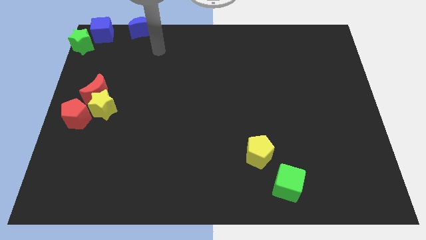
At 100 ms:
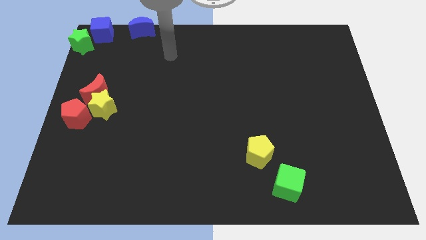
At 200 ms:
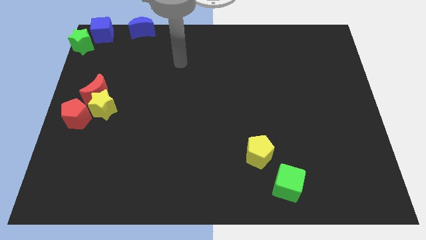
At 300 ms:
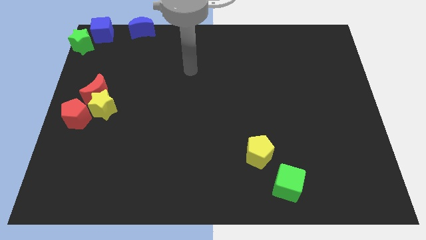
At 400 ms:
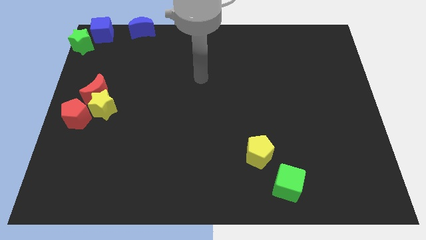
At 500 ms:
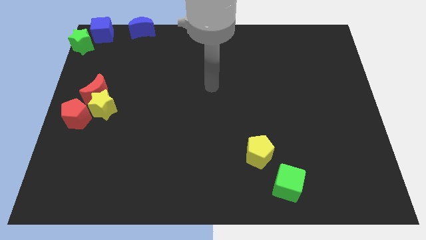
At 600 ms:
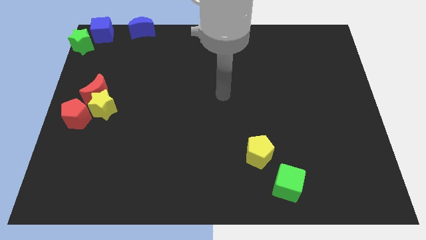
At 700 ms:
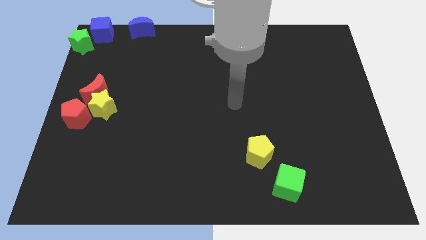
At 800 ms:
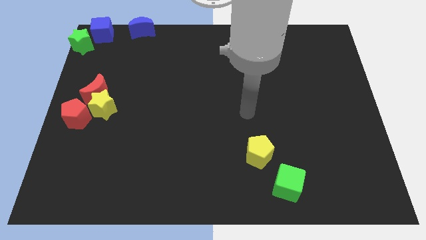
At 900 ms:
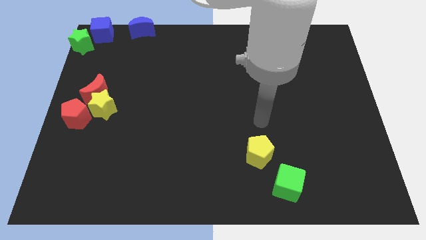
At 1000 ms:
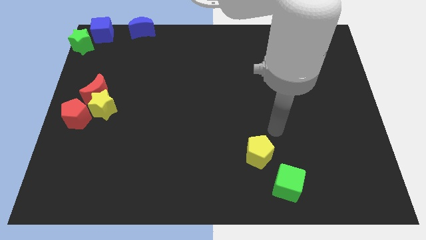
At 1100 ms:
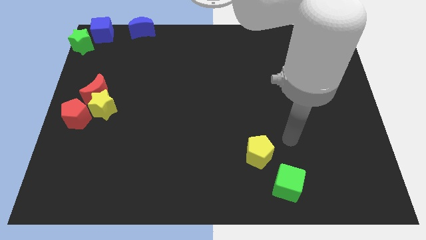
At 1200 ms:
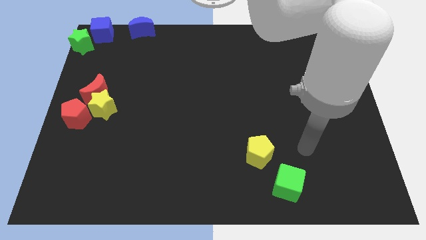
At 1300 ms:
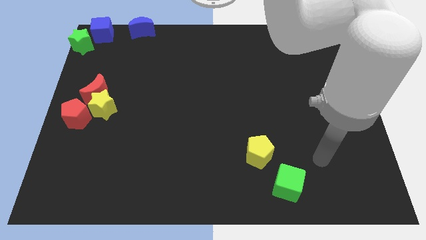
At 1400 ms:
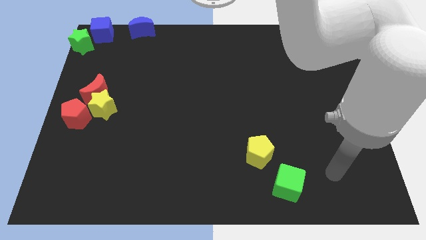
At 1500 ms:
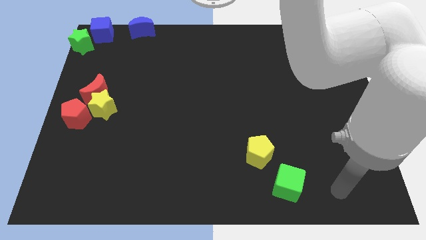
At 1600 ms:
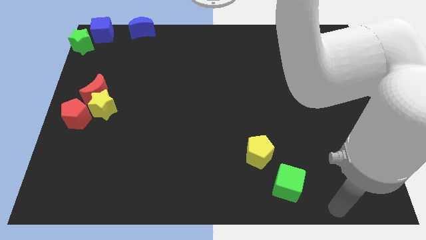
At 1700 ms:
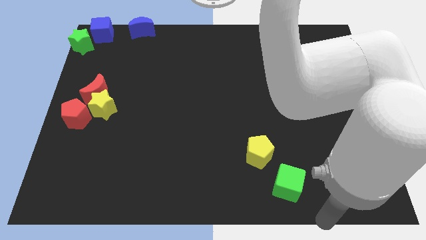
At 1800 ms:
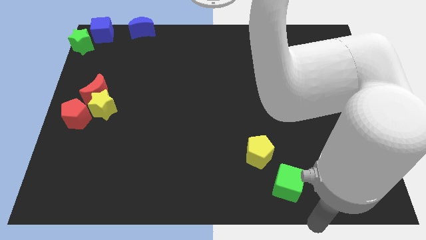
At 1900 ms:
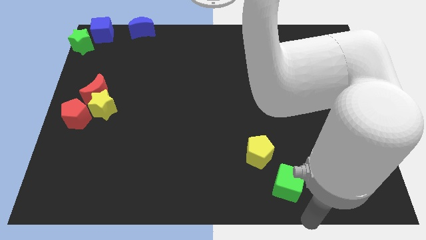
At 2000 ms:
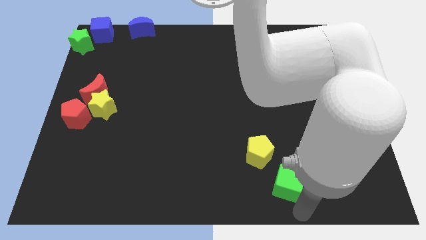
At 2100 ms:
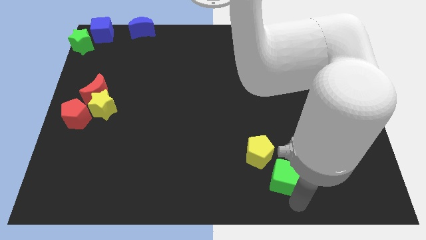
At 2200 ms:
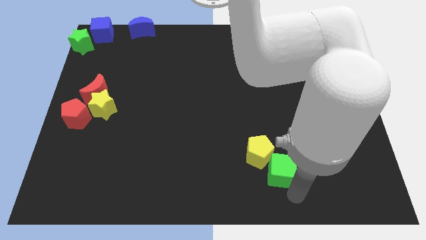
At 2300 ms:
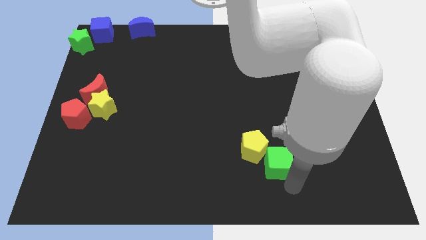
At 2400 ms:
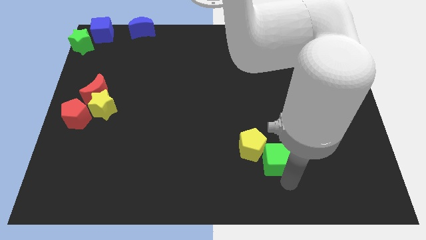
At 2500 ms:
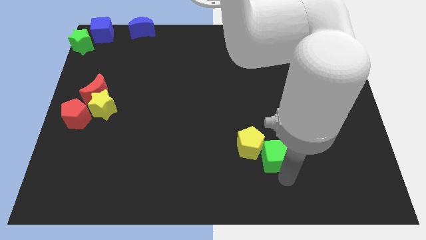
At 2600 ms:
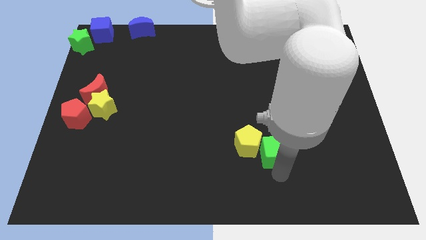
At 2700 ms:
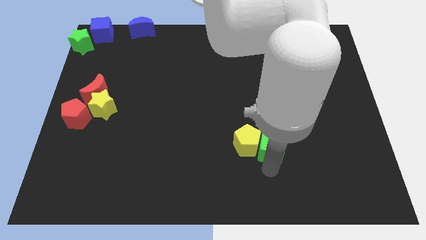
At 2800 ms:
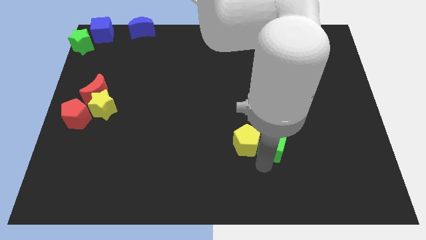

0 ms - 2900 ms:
move the green cube to the right of the yellow pentagon

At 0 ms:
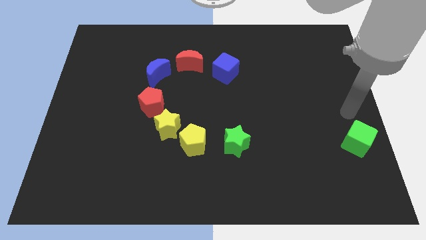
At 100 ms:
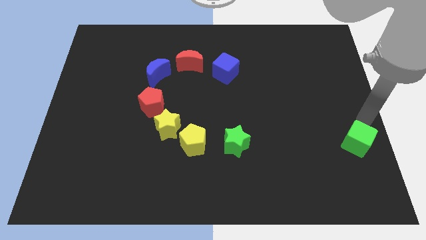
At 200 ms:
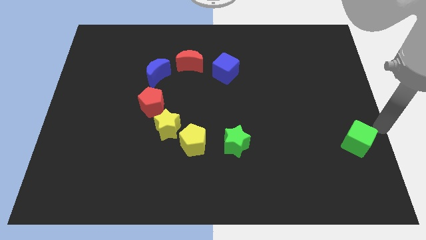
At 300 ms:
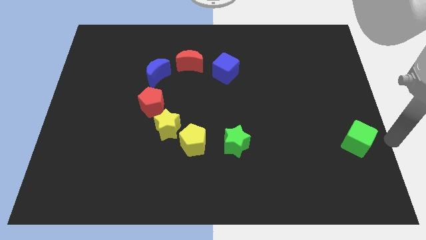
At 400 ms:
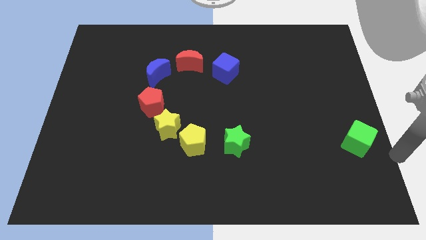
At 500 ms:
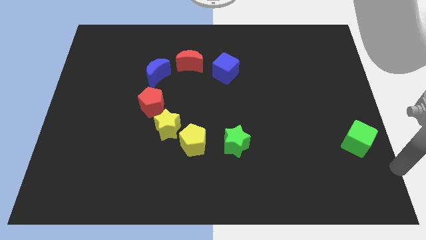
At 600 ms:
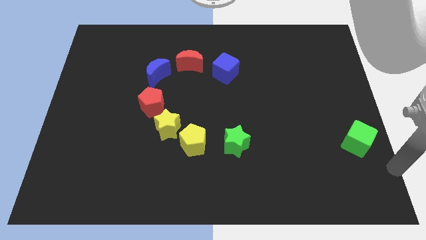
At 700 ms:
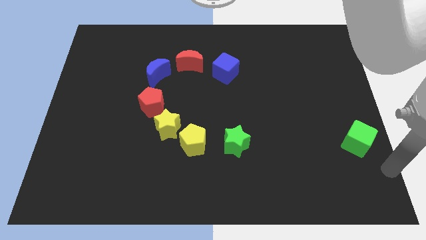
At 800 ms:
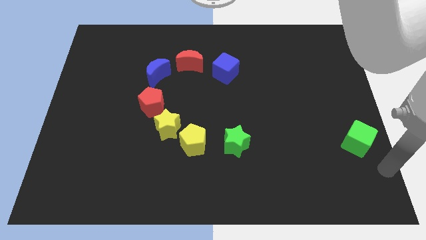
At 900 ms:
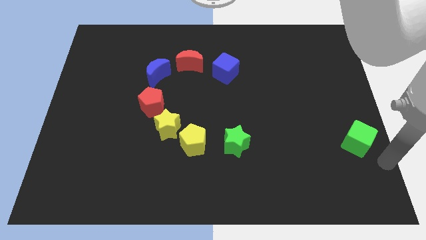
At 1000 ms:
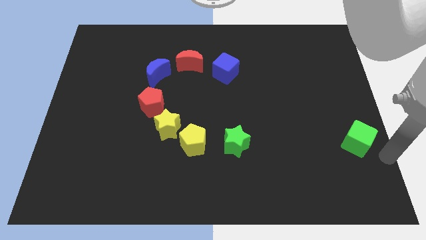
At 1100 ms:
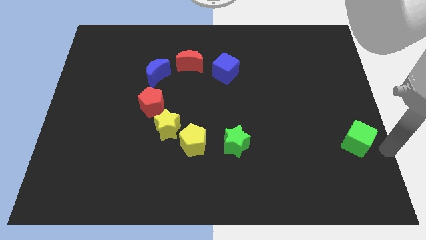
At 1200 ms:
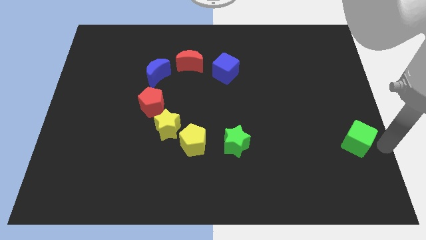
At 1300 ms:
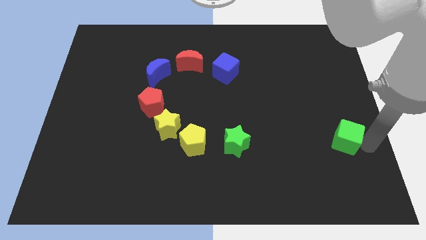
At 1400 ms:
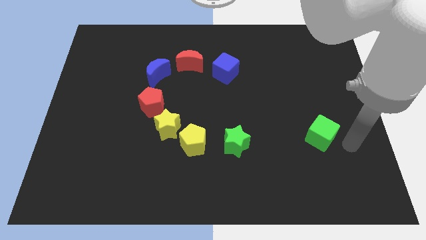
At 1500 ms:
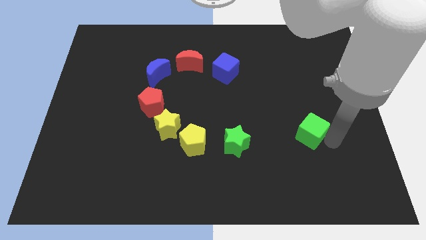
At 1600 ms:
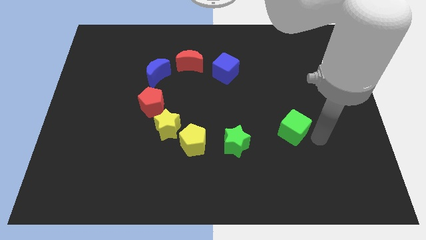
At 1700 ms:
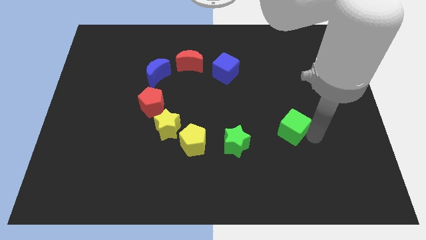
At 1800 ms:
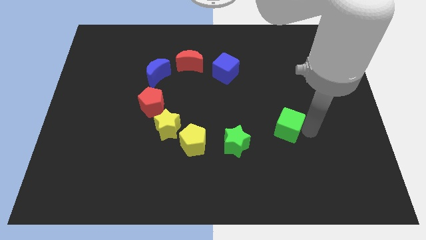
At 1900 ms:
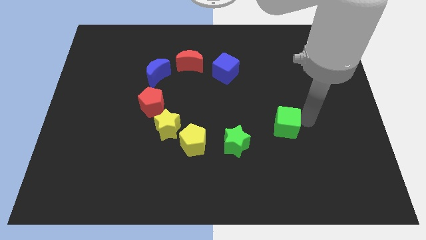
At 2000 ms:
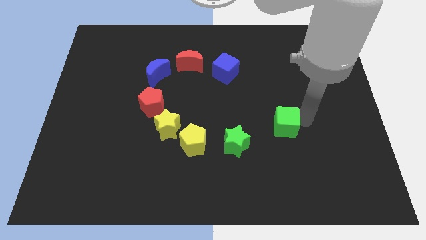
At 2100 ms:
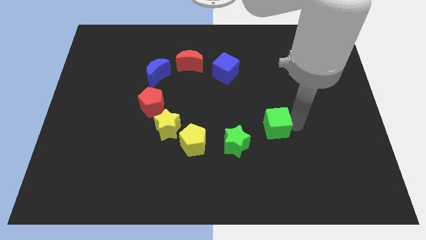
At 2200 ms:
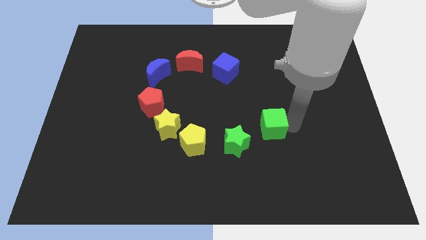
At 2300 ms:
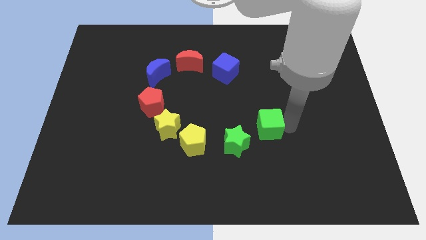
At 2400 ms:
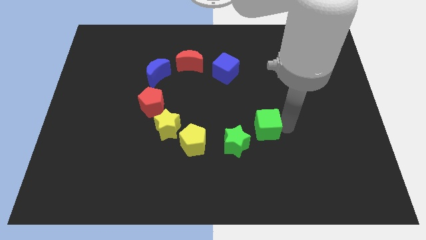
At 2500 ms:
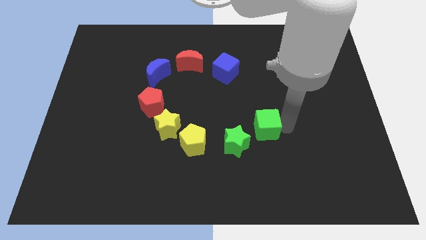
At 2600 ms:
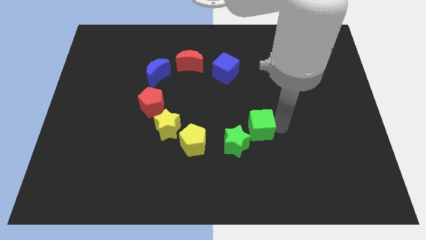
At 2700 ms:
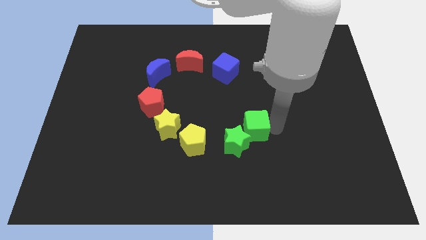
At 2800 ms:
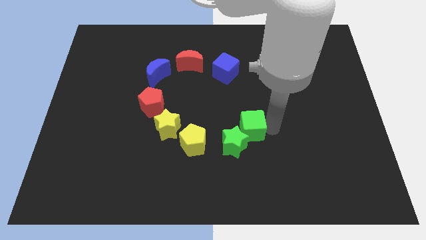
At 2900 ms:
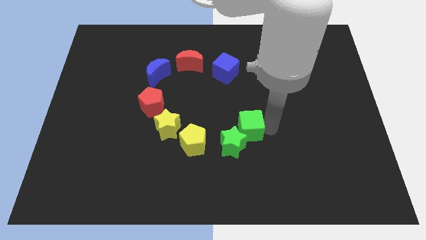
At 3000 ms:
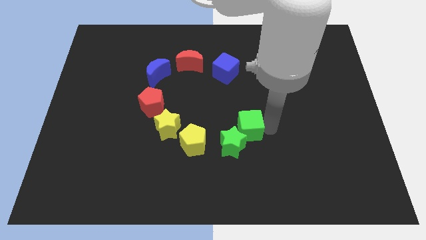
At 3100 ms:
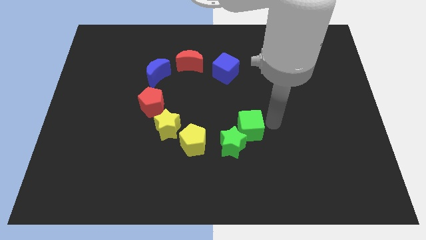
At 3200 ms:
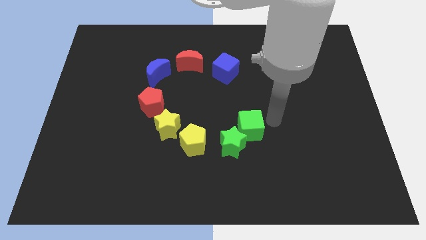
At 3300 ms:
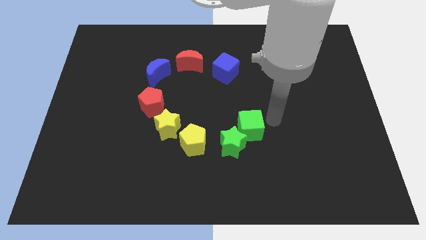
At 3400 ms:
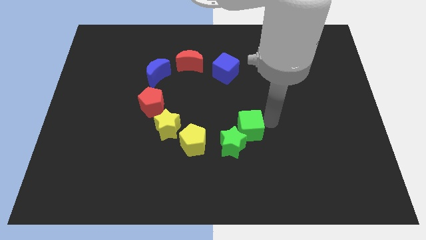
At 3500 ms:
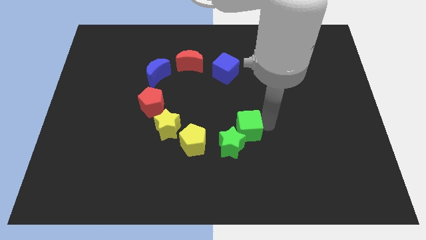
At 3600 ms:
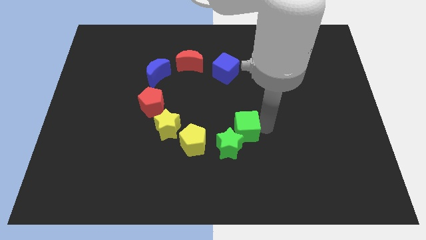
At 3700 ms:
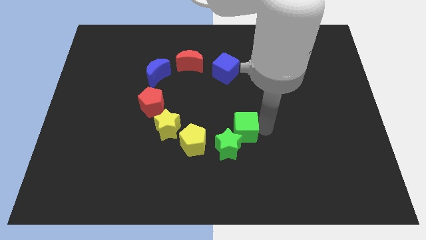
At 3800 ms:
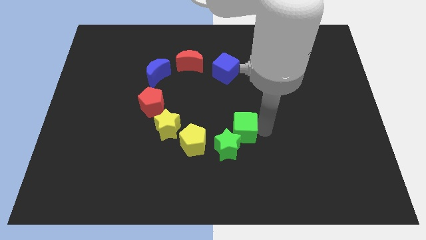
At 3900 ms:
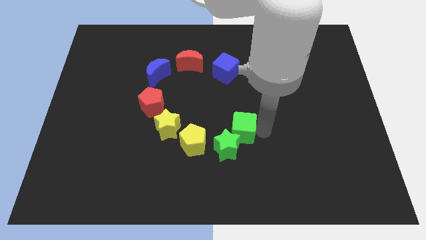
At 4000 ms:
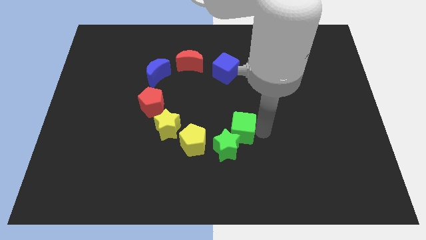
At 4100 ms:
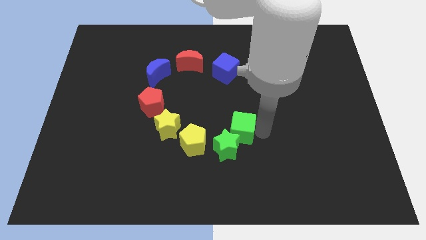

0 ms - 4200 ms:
move the green cube into the green star

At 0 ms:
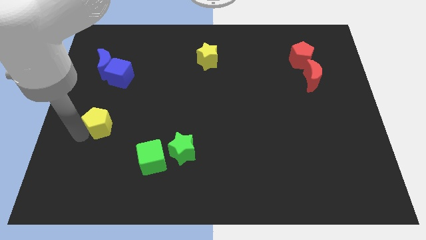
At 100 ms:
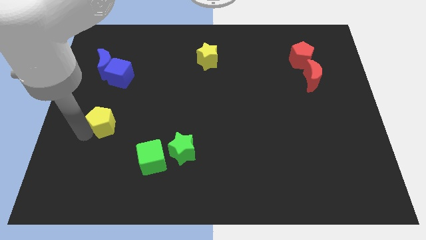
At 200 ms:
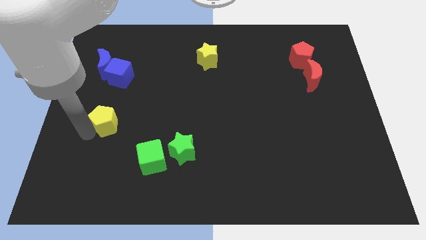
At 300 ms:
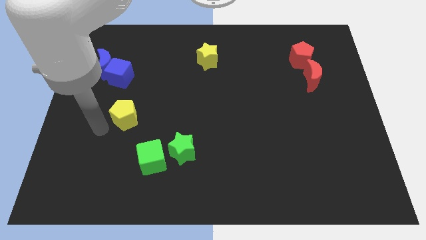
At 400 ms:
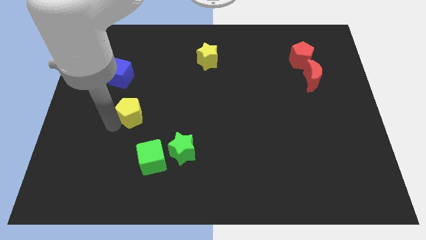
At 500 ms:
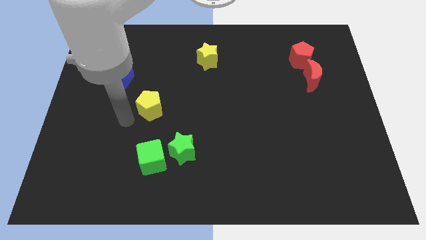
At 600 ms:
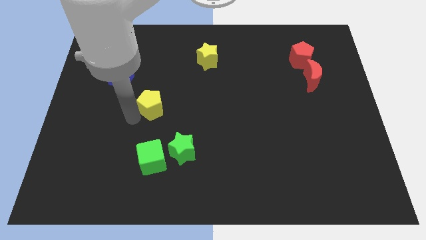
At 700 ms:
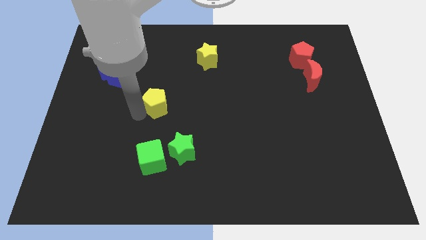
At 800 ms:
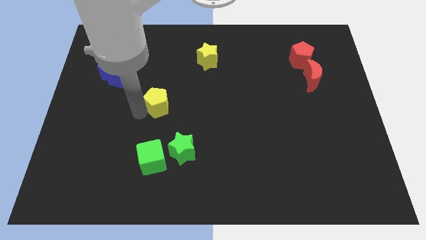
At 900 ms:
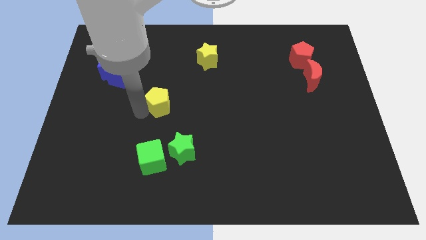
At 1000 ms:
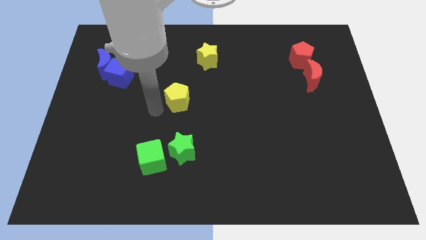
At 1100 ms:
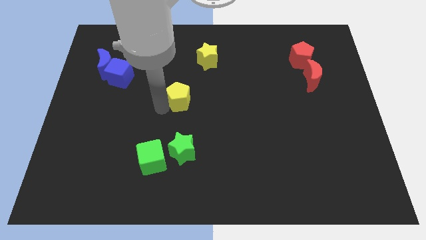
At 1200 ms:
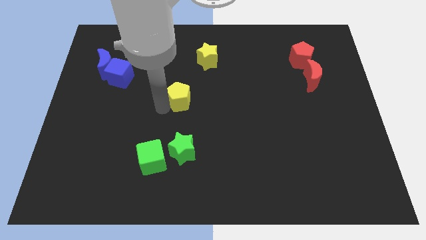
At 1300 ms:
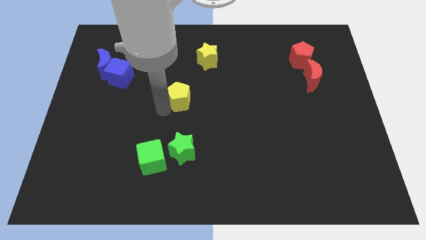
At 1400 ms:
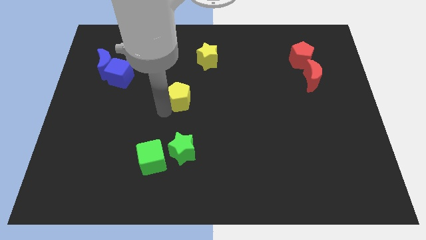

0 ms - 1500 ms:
push the yellow pentagon to the right of the board

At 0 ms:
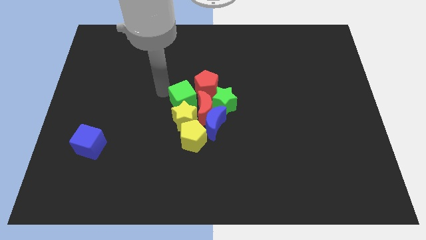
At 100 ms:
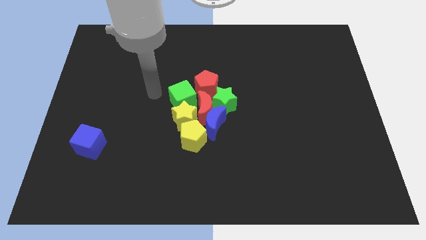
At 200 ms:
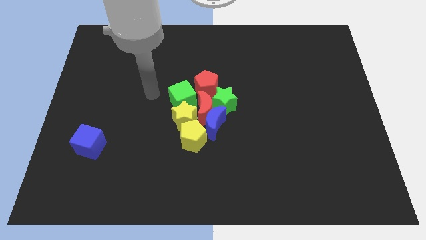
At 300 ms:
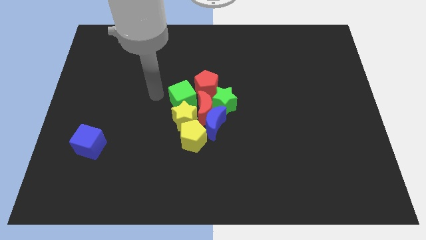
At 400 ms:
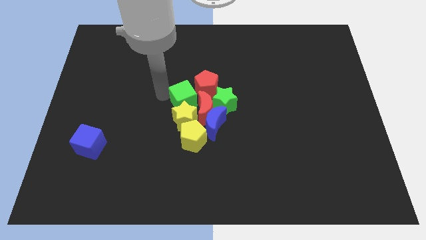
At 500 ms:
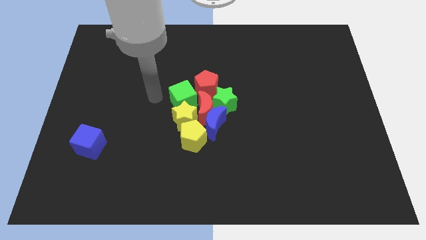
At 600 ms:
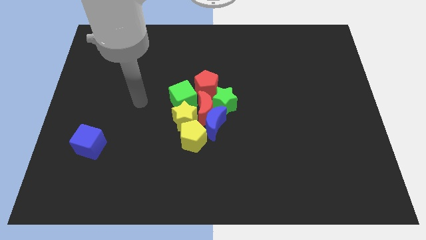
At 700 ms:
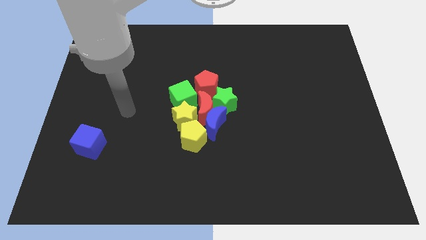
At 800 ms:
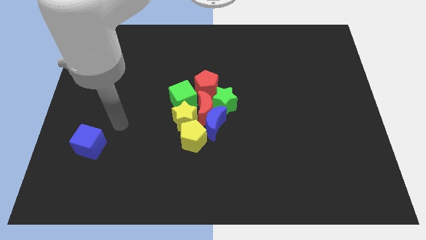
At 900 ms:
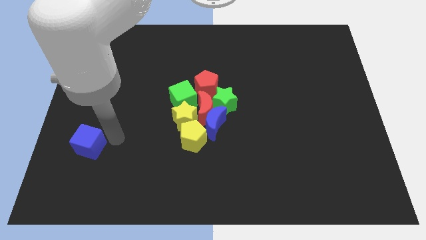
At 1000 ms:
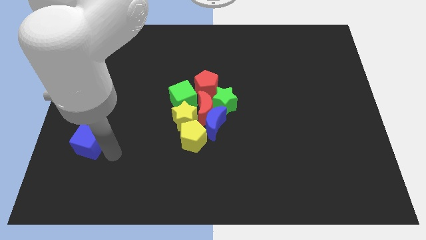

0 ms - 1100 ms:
move yourself close to the right side of the blue cube
